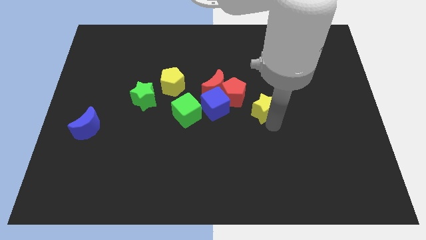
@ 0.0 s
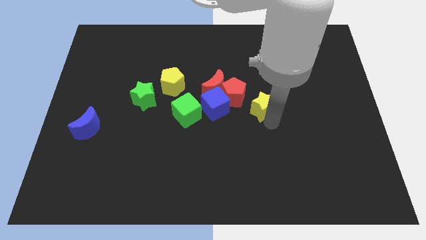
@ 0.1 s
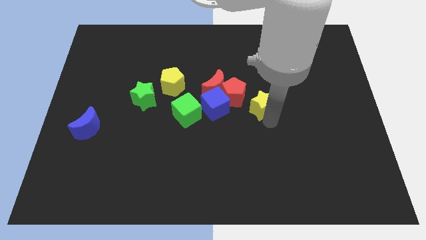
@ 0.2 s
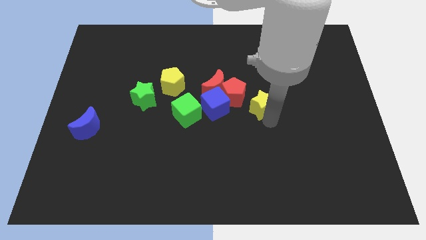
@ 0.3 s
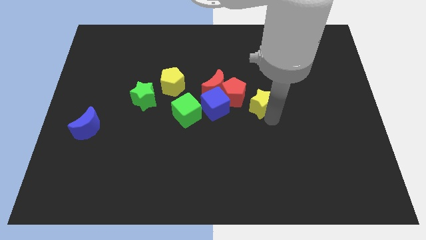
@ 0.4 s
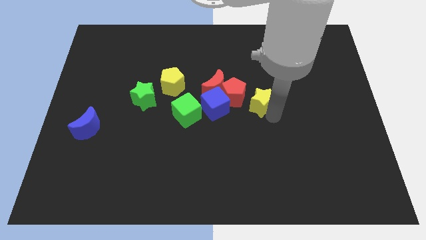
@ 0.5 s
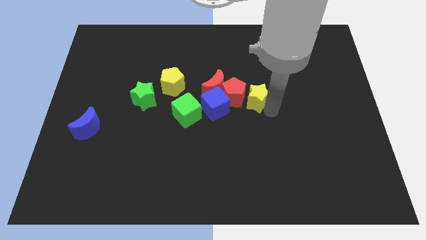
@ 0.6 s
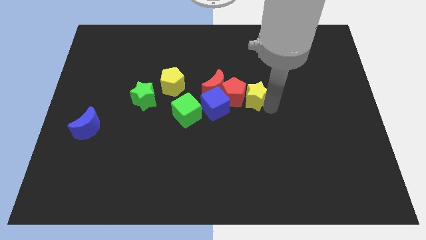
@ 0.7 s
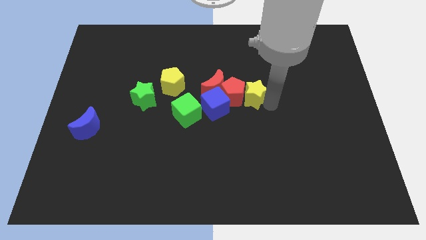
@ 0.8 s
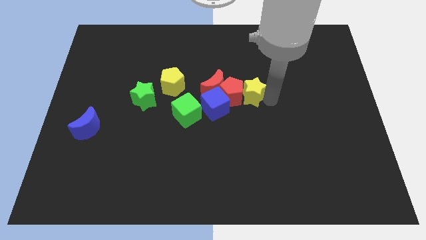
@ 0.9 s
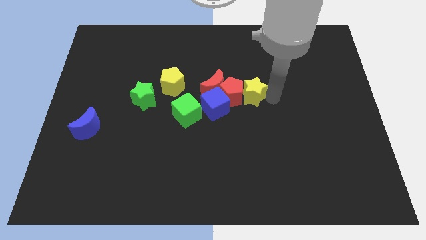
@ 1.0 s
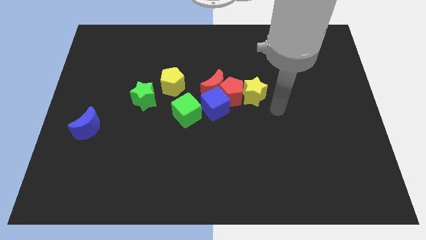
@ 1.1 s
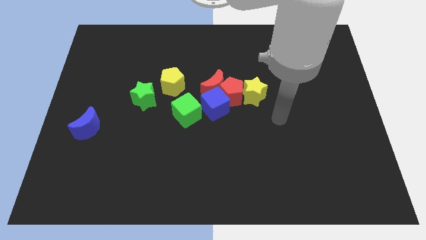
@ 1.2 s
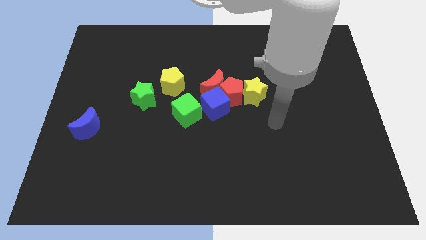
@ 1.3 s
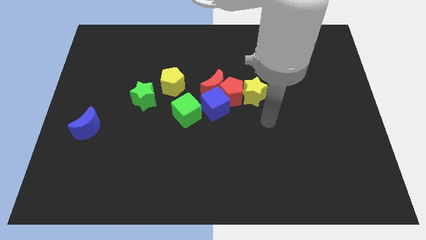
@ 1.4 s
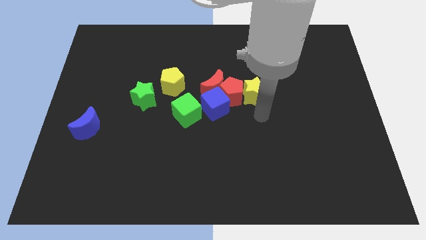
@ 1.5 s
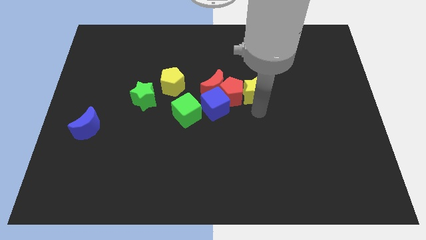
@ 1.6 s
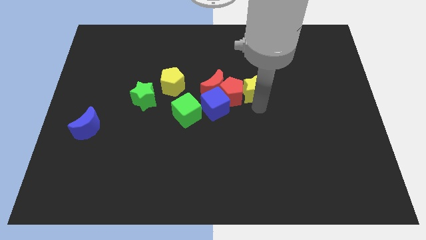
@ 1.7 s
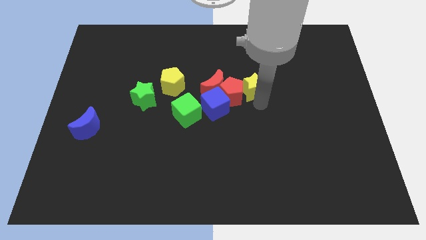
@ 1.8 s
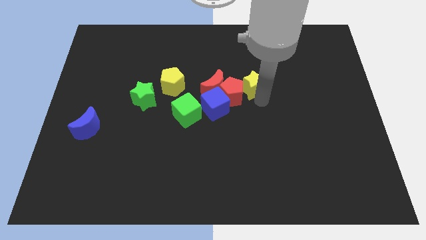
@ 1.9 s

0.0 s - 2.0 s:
drag the yellow star towards the right side of the red pentagon

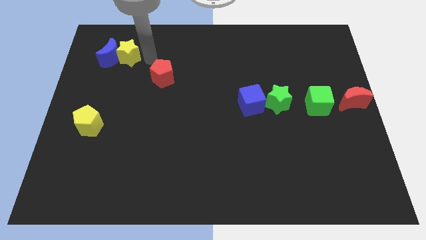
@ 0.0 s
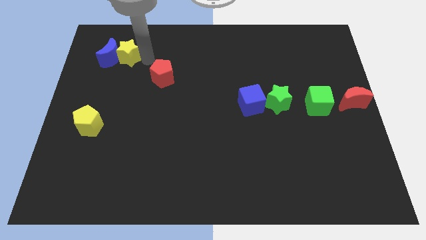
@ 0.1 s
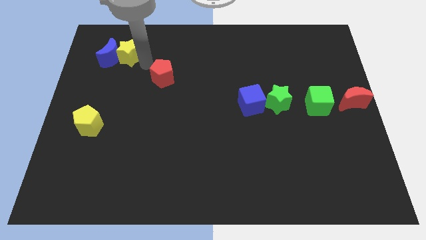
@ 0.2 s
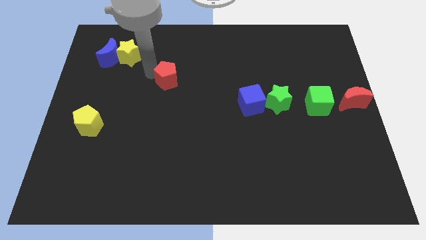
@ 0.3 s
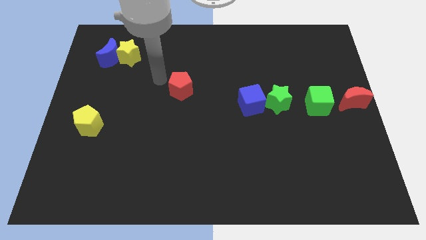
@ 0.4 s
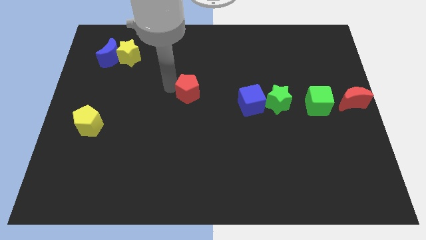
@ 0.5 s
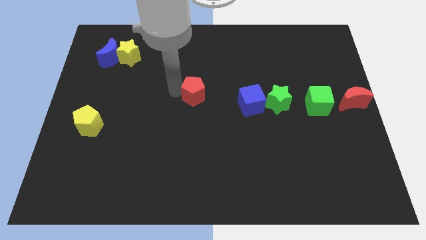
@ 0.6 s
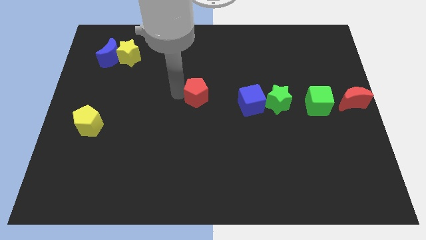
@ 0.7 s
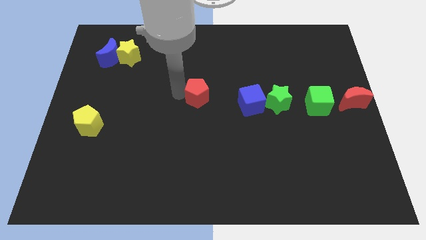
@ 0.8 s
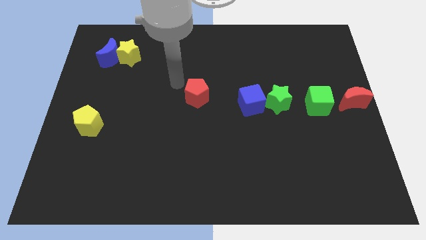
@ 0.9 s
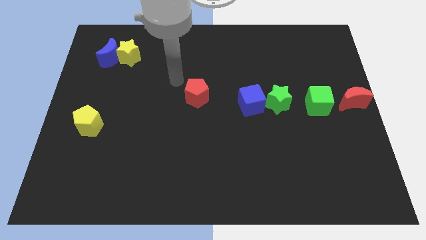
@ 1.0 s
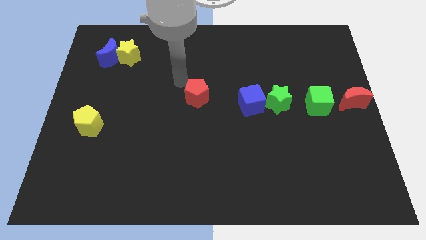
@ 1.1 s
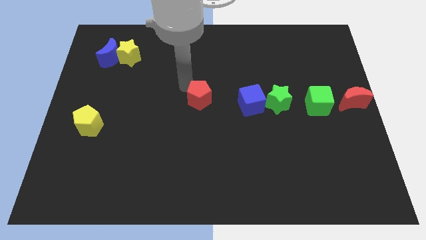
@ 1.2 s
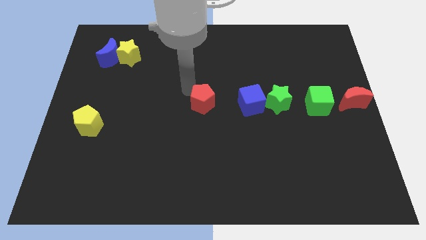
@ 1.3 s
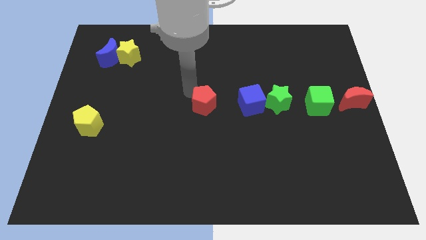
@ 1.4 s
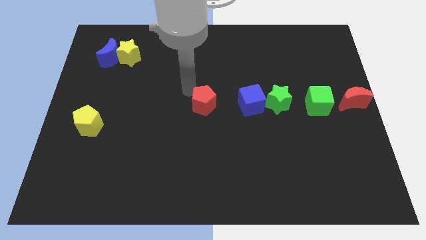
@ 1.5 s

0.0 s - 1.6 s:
move the red crescent to the center of the board

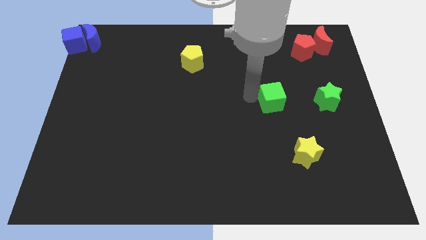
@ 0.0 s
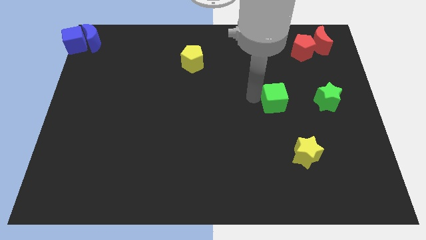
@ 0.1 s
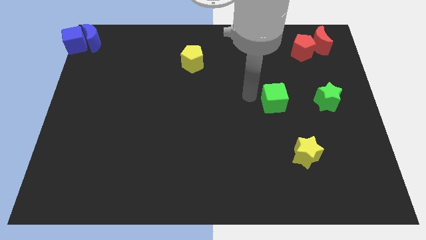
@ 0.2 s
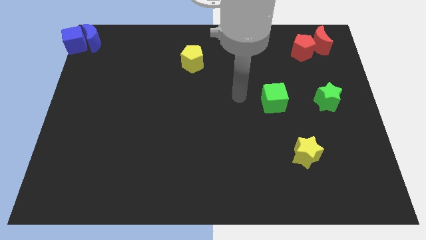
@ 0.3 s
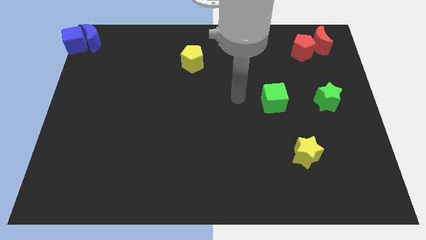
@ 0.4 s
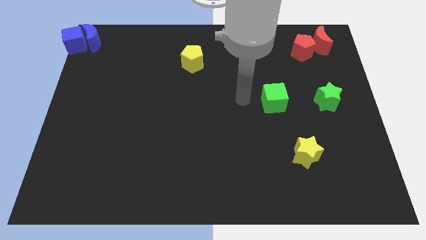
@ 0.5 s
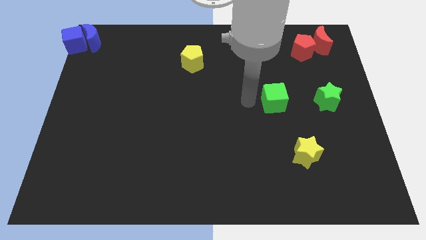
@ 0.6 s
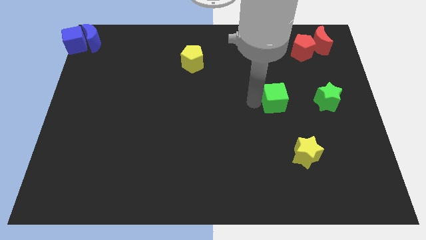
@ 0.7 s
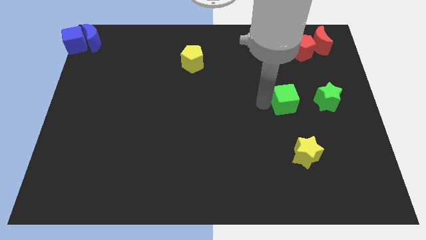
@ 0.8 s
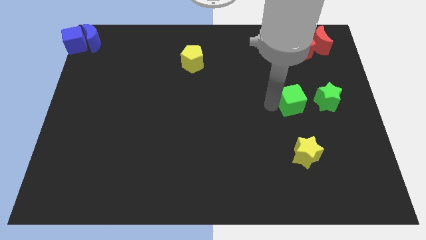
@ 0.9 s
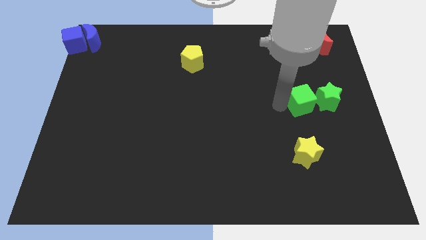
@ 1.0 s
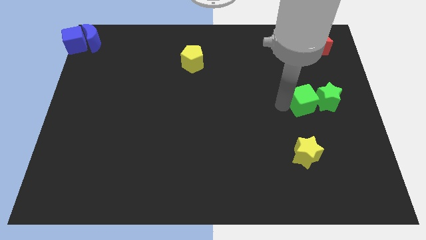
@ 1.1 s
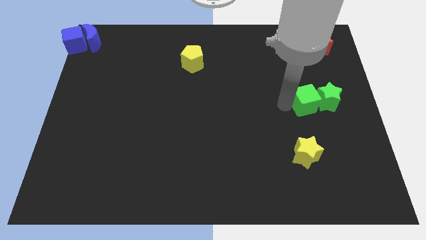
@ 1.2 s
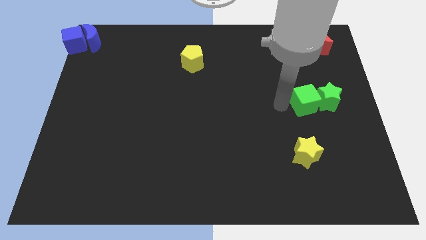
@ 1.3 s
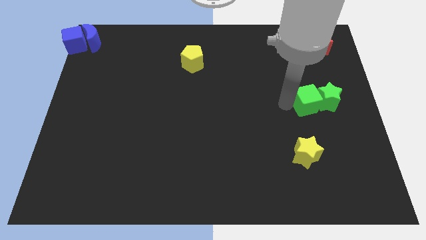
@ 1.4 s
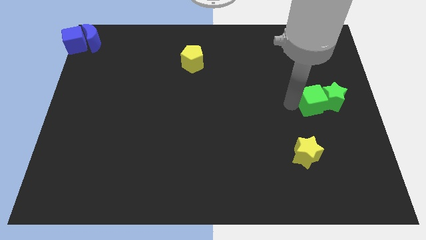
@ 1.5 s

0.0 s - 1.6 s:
move the green cube into the left side of the green star

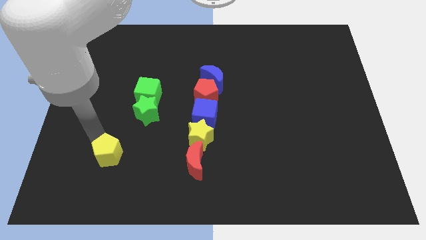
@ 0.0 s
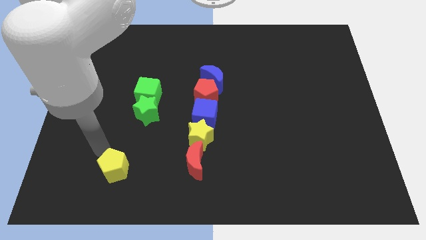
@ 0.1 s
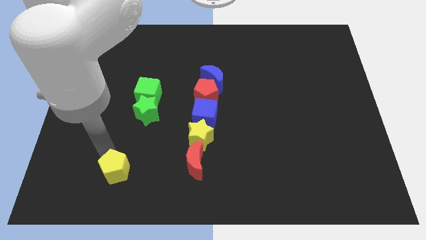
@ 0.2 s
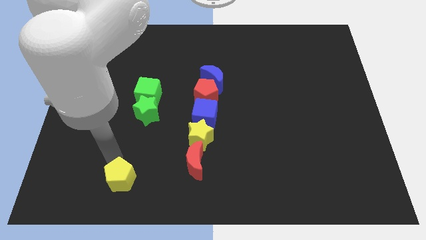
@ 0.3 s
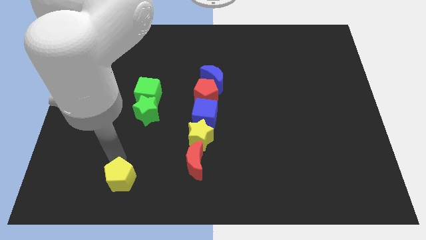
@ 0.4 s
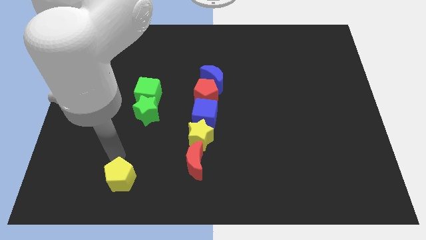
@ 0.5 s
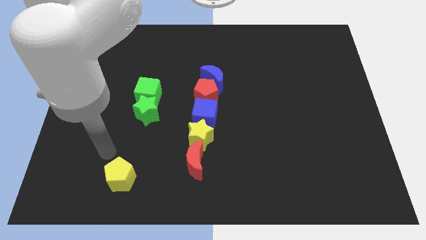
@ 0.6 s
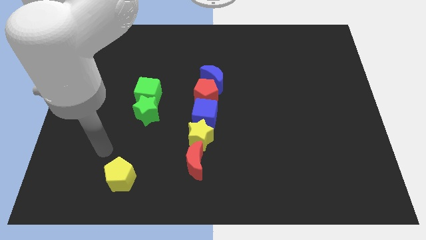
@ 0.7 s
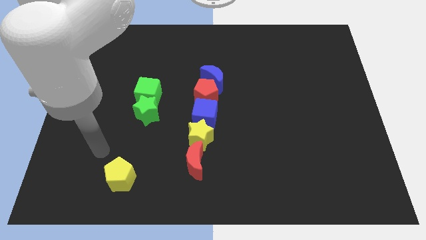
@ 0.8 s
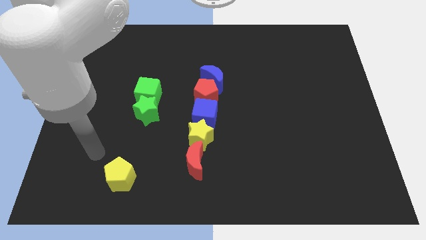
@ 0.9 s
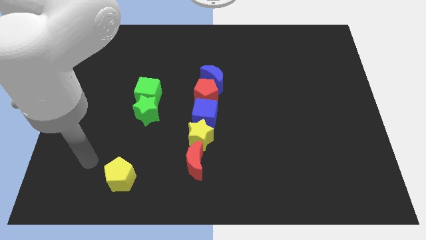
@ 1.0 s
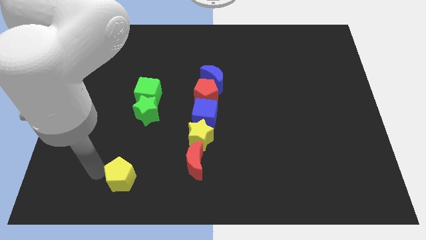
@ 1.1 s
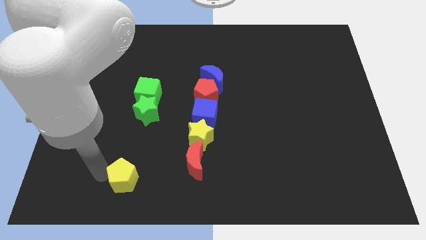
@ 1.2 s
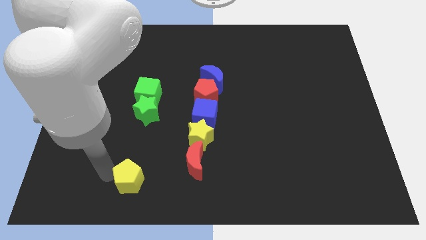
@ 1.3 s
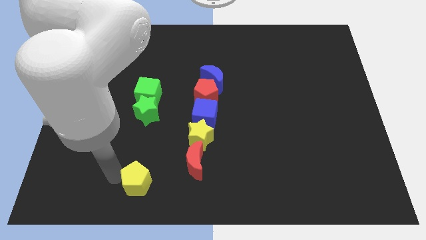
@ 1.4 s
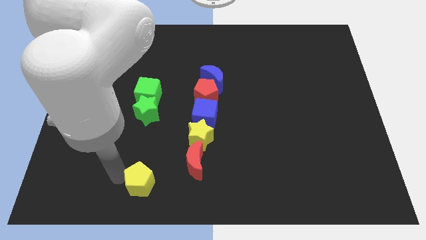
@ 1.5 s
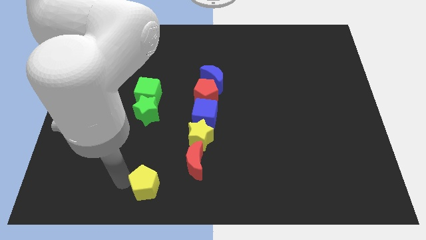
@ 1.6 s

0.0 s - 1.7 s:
push the yellow pentagon vertically below the green star

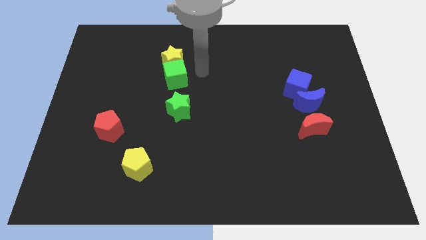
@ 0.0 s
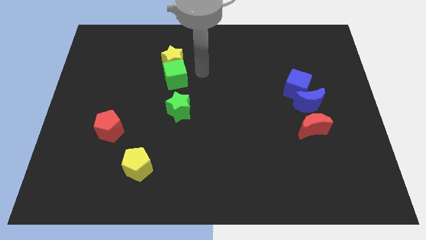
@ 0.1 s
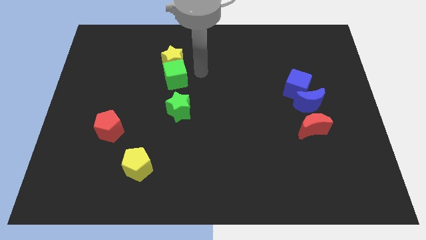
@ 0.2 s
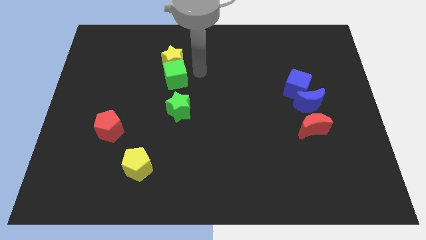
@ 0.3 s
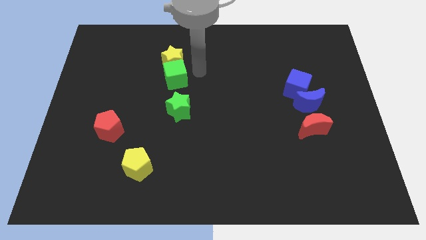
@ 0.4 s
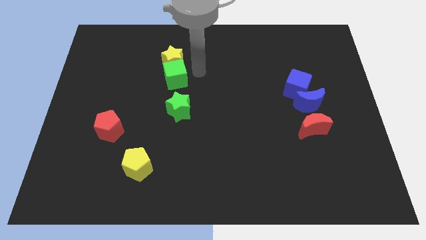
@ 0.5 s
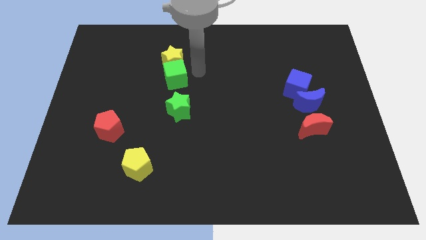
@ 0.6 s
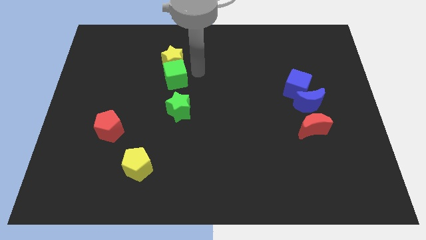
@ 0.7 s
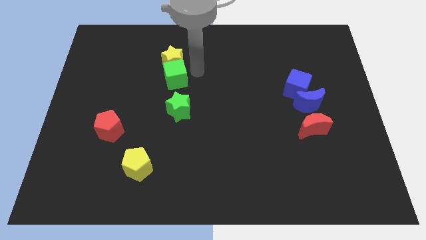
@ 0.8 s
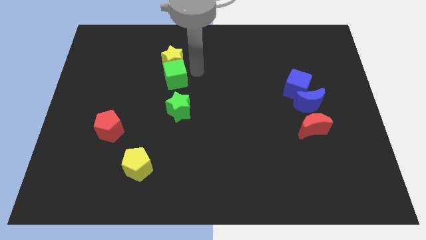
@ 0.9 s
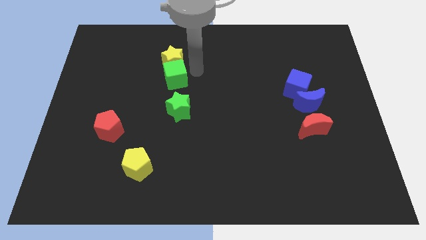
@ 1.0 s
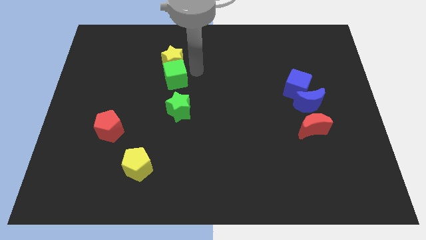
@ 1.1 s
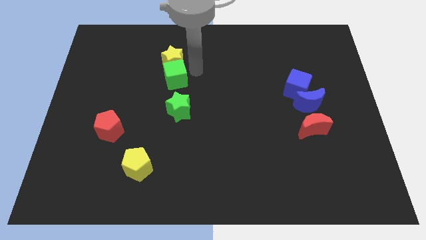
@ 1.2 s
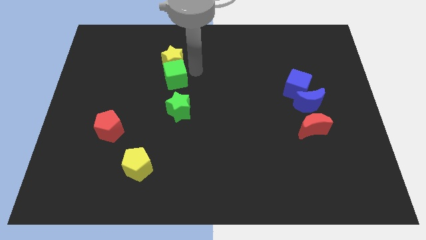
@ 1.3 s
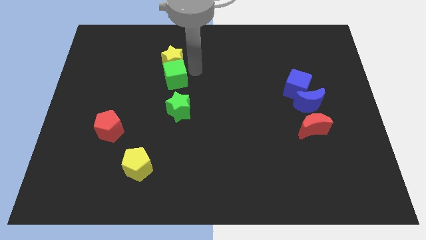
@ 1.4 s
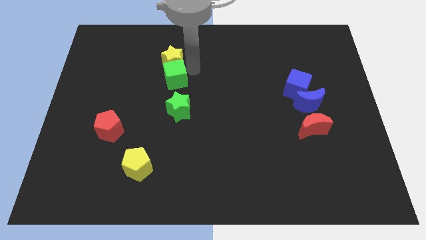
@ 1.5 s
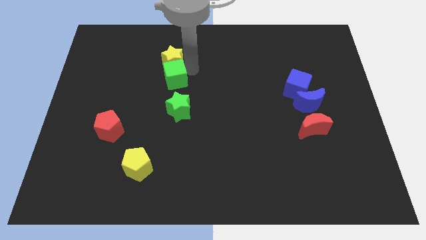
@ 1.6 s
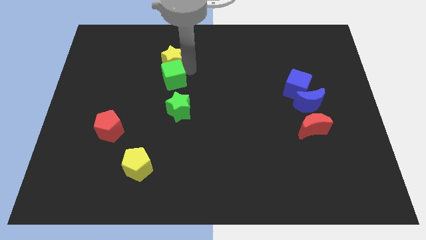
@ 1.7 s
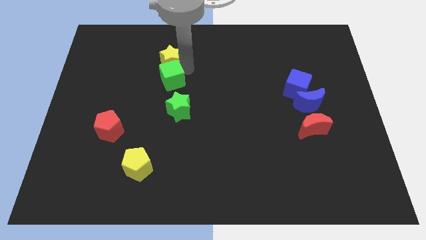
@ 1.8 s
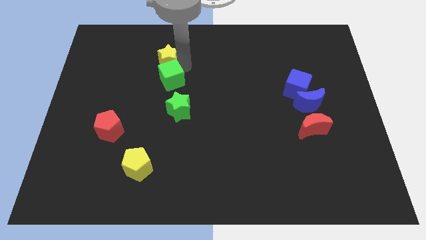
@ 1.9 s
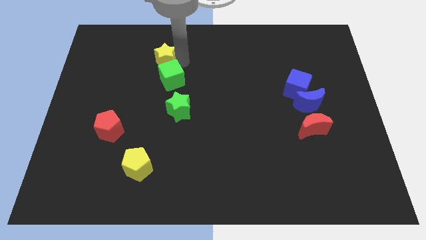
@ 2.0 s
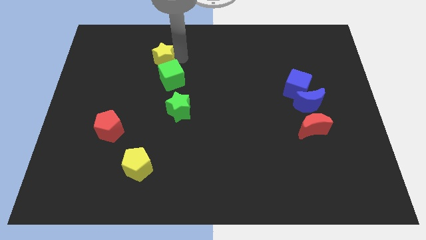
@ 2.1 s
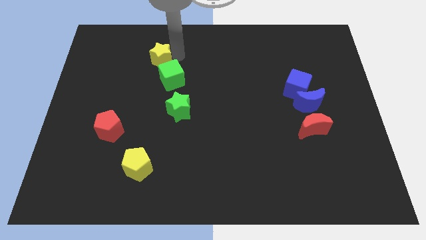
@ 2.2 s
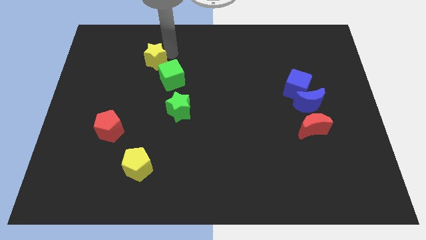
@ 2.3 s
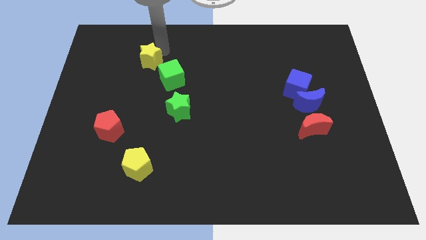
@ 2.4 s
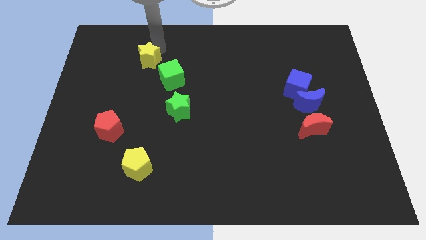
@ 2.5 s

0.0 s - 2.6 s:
separate the yellow star from the green cube
